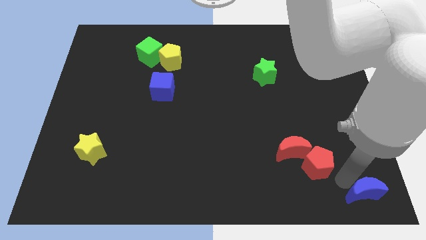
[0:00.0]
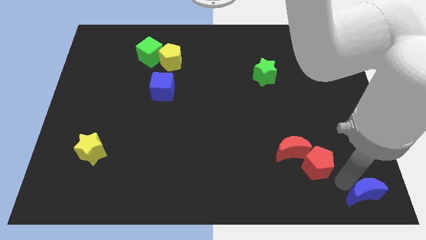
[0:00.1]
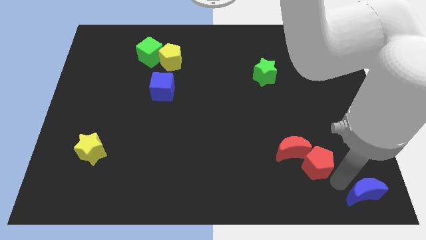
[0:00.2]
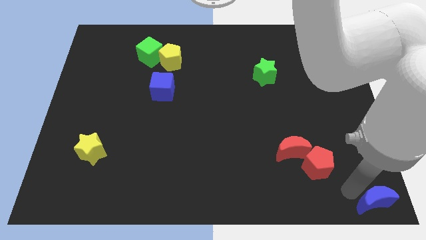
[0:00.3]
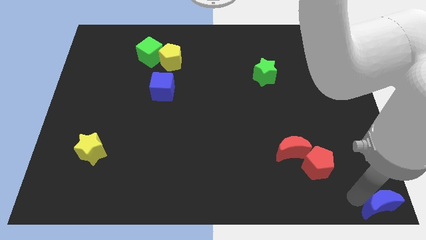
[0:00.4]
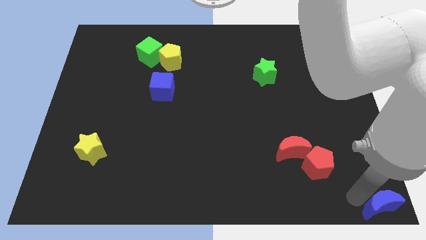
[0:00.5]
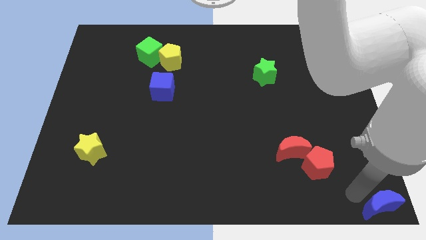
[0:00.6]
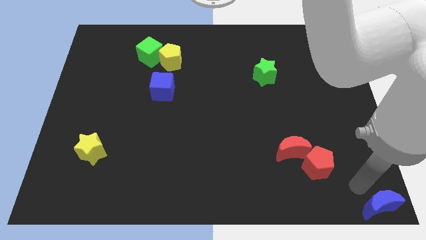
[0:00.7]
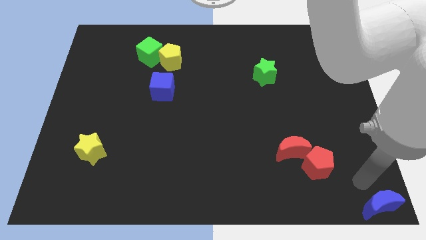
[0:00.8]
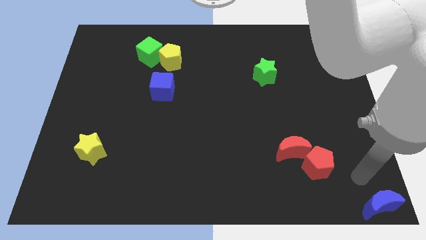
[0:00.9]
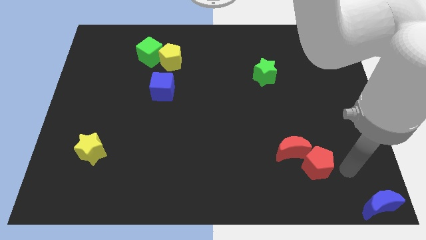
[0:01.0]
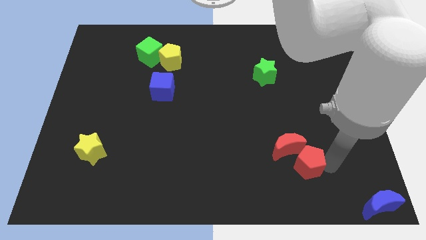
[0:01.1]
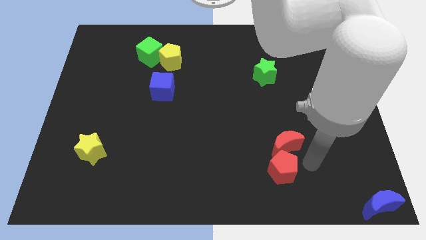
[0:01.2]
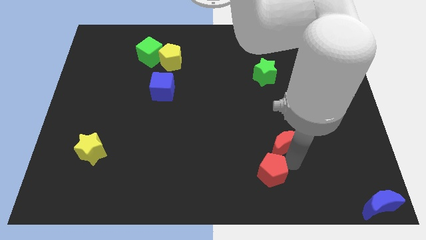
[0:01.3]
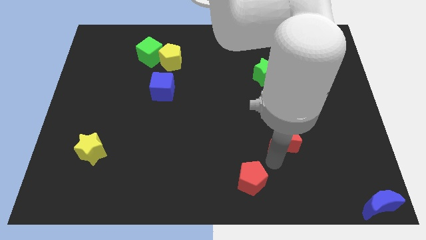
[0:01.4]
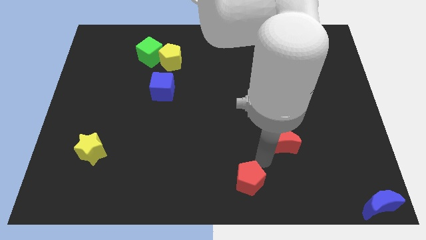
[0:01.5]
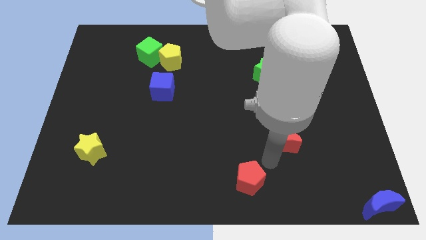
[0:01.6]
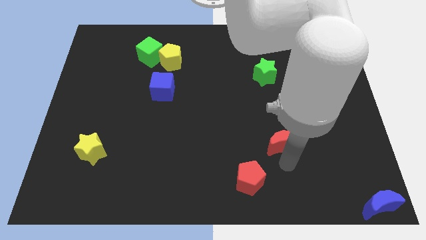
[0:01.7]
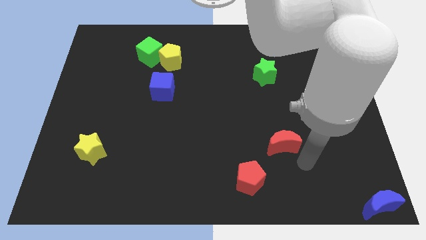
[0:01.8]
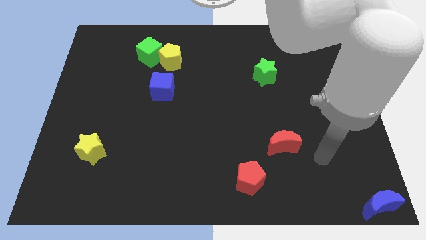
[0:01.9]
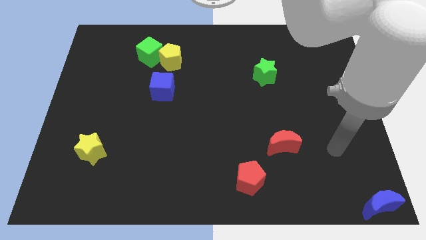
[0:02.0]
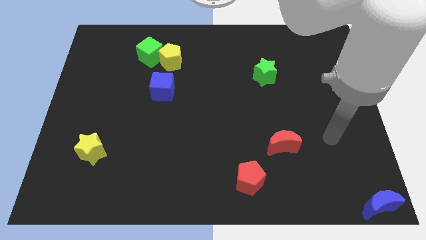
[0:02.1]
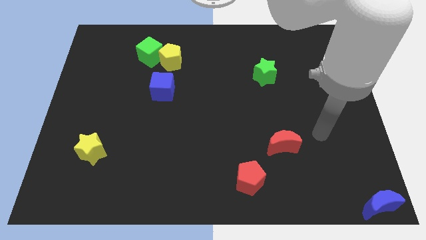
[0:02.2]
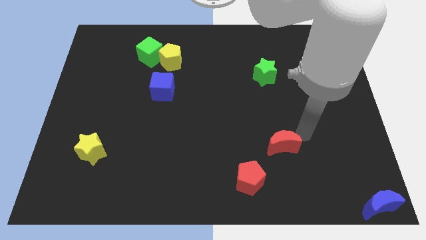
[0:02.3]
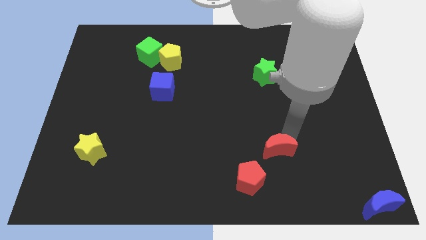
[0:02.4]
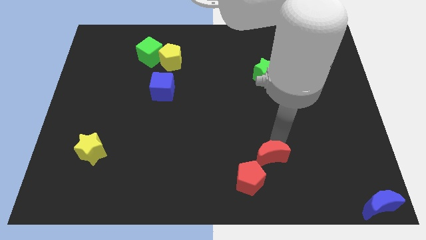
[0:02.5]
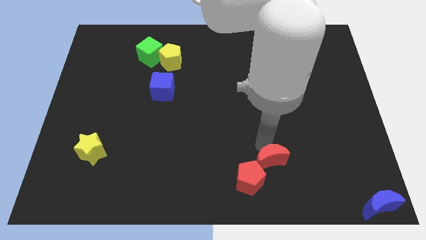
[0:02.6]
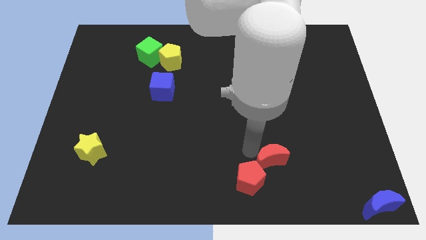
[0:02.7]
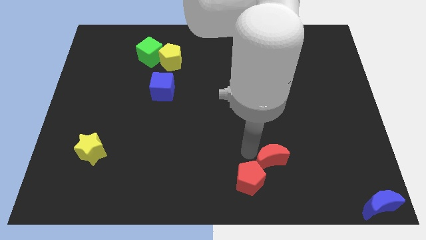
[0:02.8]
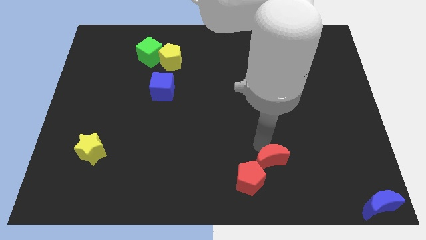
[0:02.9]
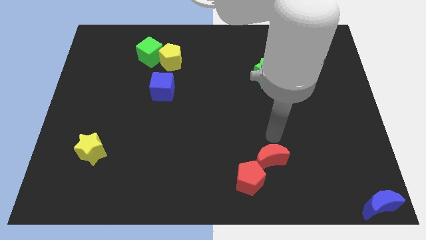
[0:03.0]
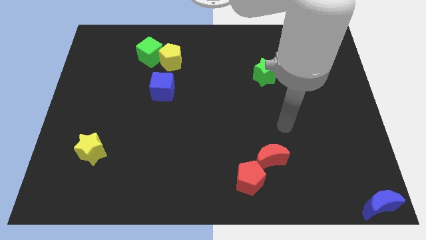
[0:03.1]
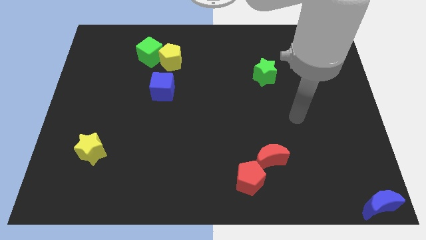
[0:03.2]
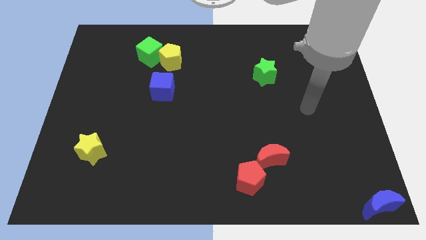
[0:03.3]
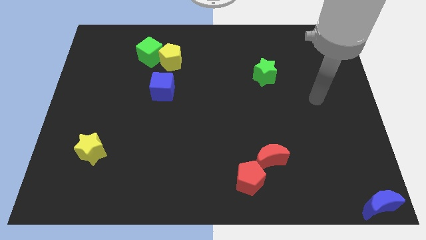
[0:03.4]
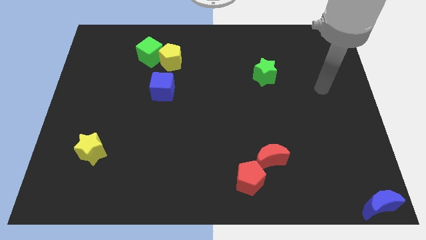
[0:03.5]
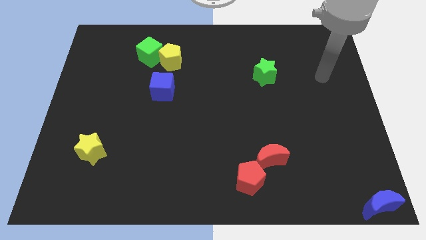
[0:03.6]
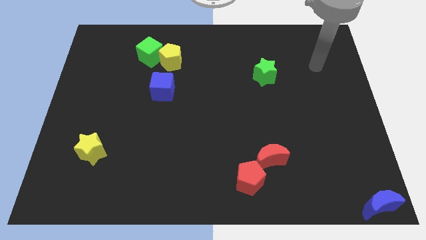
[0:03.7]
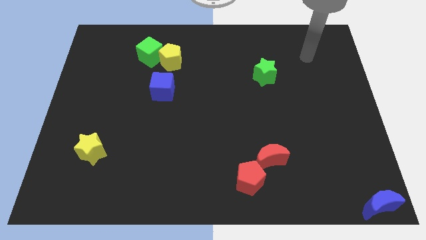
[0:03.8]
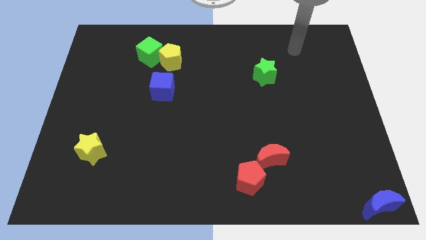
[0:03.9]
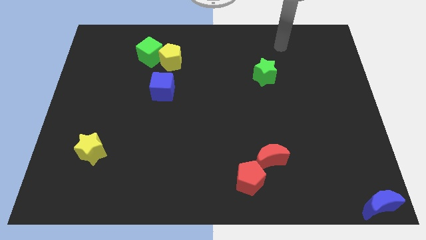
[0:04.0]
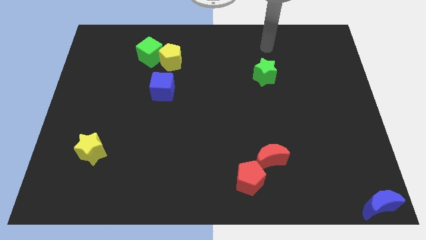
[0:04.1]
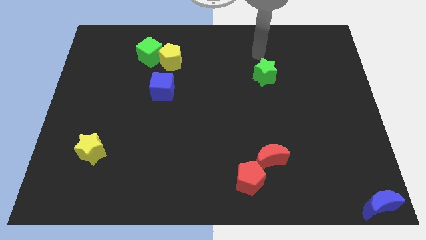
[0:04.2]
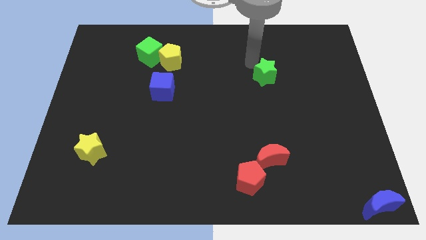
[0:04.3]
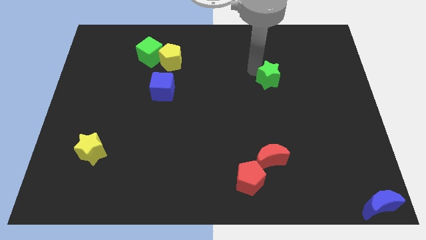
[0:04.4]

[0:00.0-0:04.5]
slide the red pentagon diagonally to the bottom right side of the blue cube

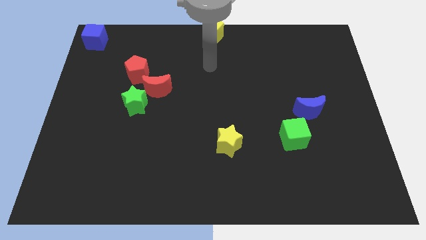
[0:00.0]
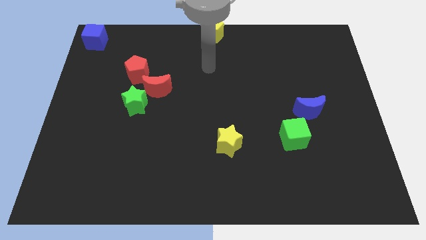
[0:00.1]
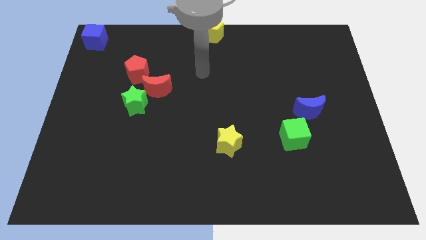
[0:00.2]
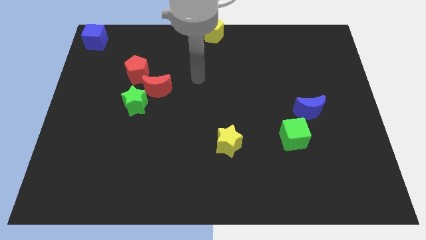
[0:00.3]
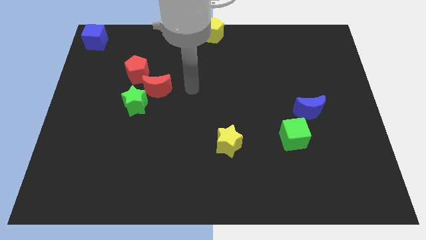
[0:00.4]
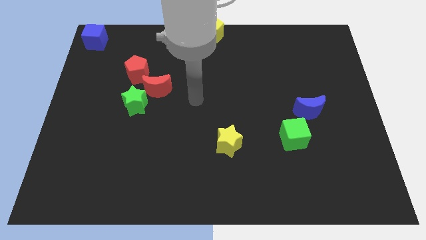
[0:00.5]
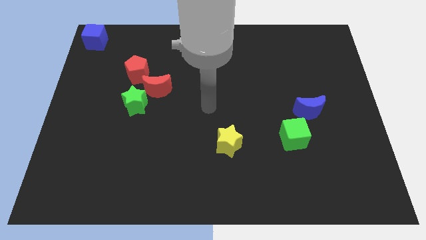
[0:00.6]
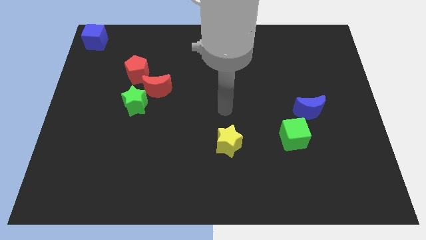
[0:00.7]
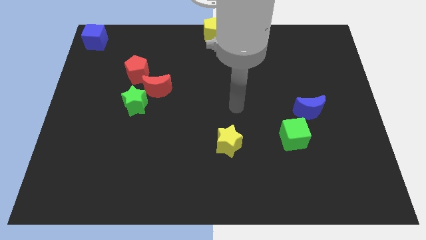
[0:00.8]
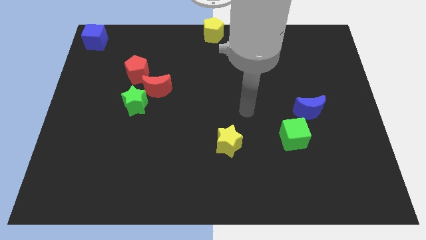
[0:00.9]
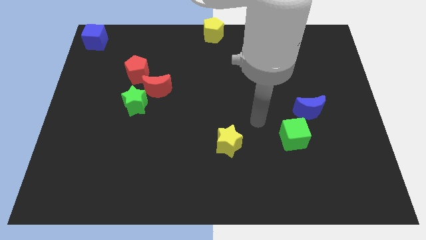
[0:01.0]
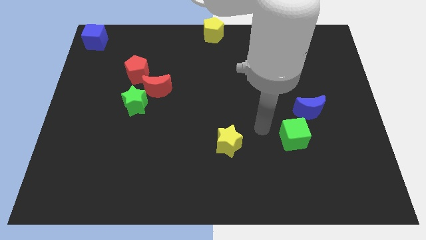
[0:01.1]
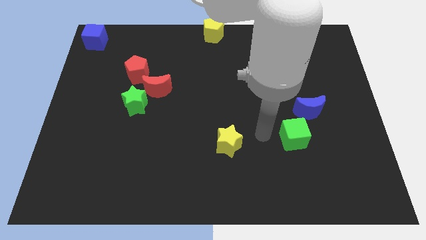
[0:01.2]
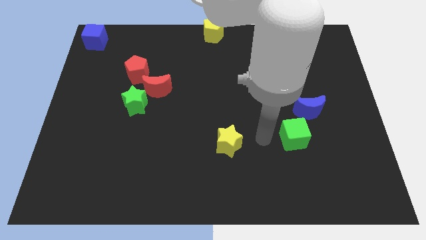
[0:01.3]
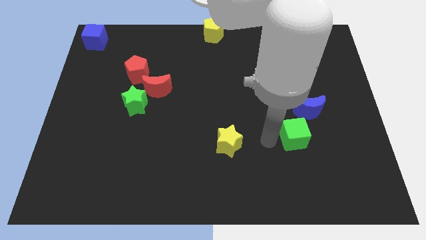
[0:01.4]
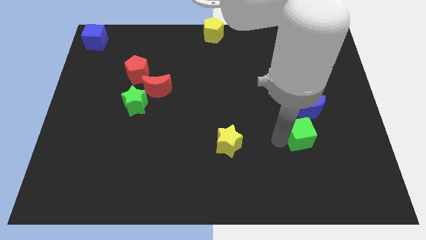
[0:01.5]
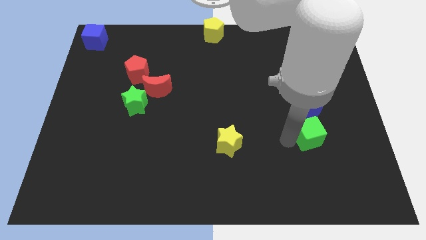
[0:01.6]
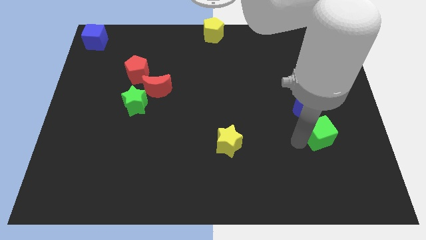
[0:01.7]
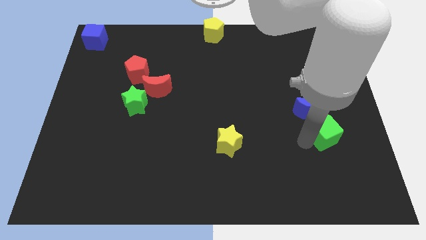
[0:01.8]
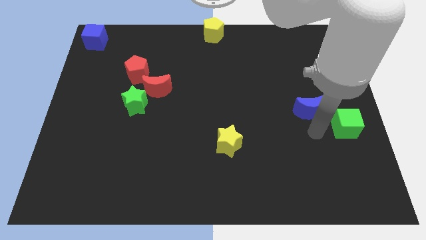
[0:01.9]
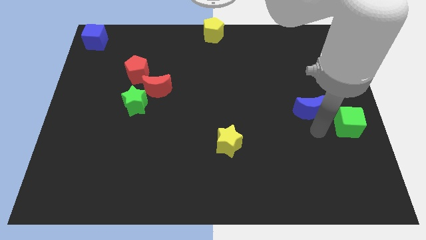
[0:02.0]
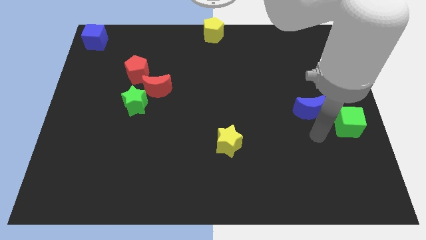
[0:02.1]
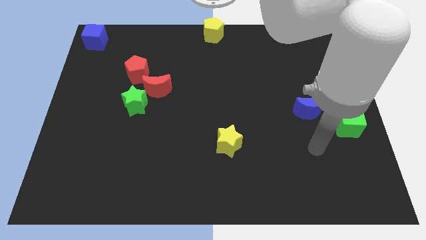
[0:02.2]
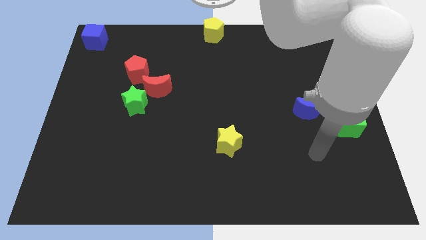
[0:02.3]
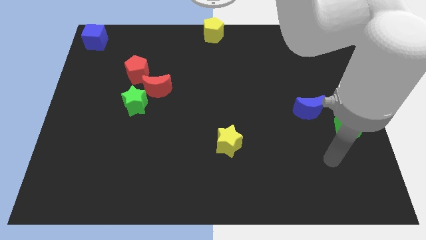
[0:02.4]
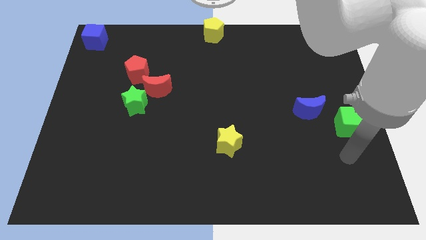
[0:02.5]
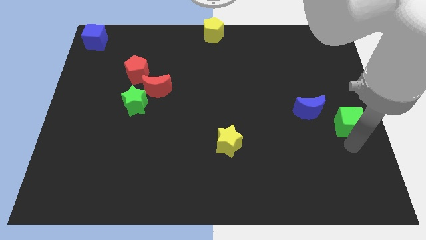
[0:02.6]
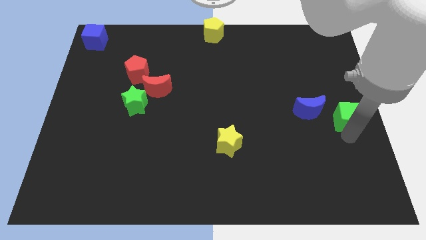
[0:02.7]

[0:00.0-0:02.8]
drag the green cube to the bottom right of the blue moon

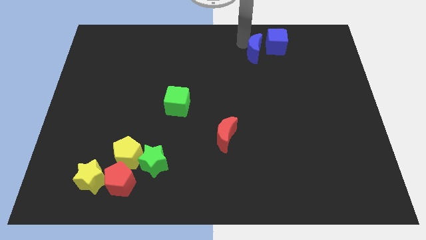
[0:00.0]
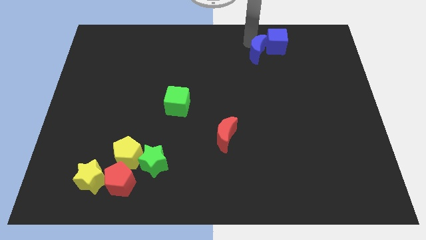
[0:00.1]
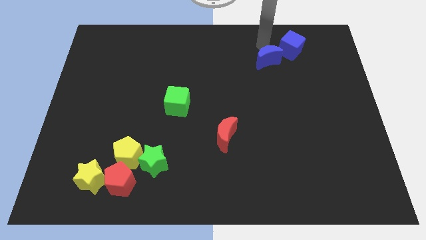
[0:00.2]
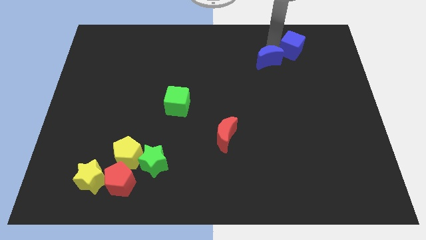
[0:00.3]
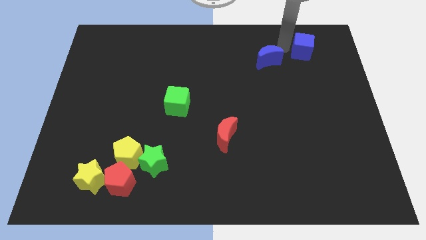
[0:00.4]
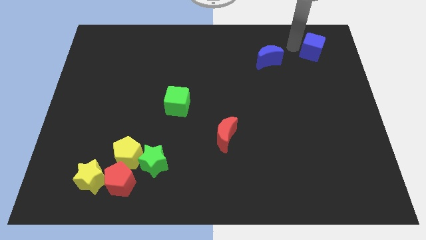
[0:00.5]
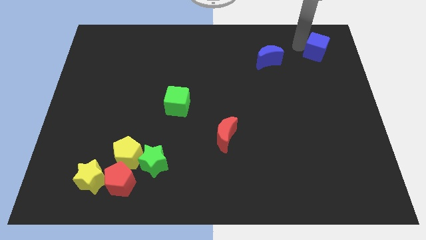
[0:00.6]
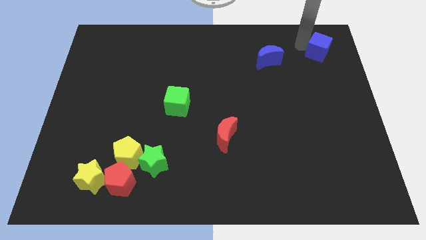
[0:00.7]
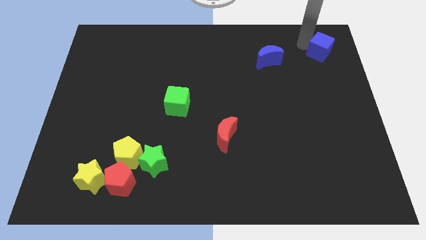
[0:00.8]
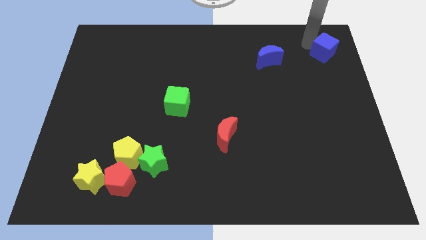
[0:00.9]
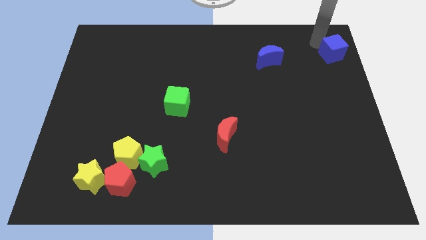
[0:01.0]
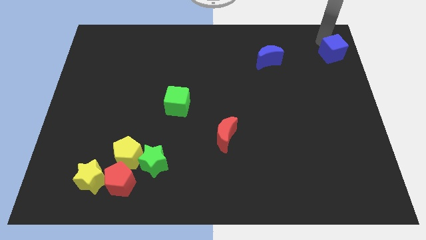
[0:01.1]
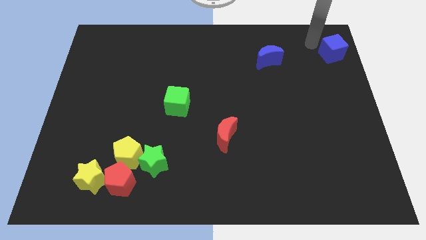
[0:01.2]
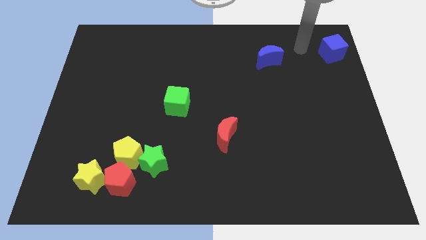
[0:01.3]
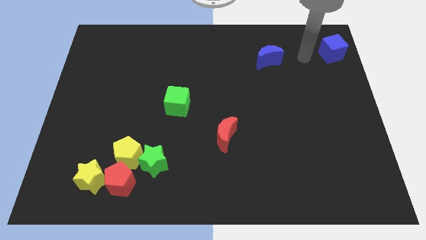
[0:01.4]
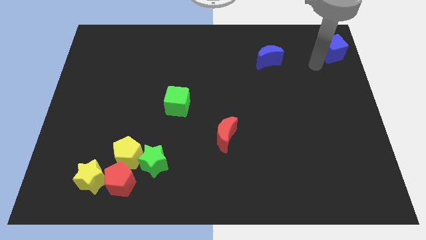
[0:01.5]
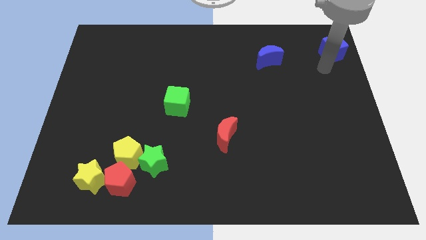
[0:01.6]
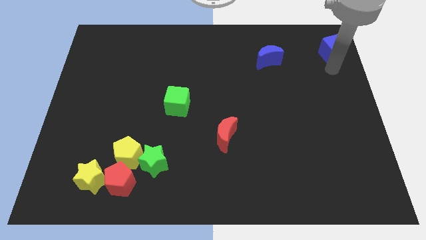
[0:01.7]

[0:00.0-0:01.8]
place the blue cube to the right of the blue crescent
